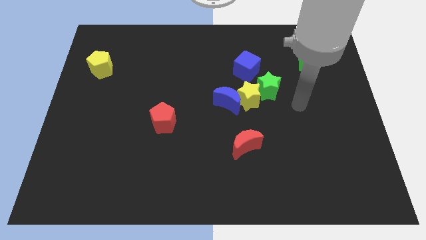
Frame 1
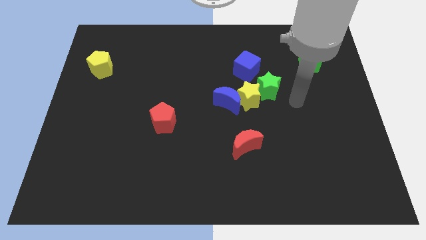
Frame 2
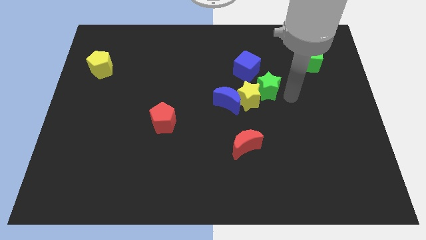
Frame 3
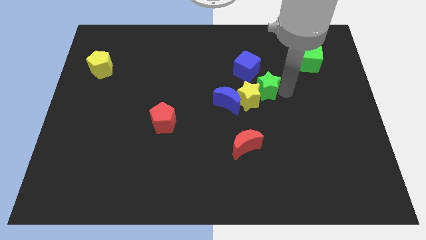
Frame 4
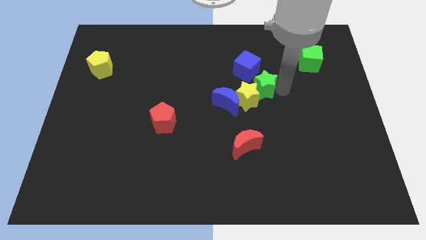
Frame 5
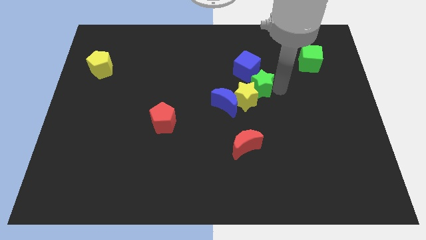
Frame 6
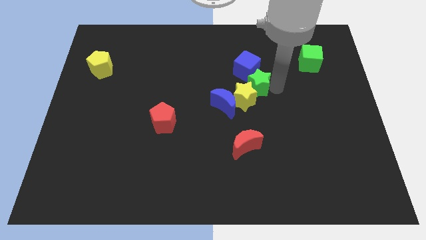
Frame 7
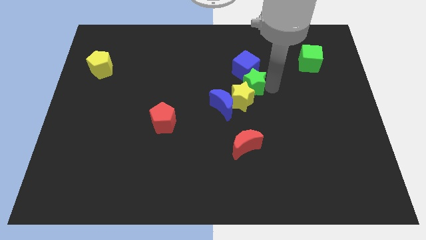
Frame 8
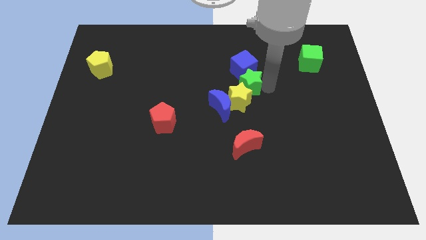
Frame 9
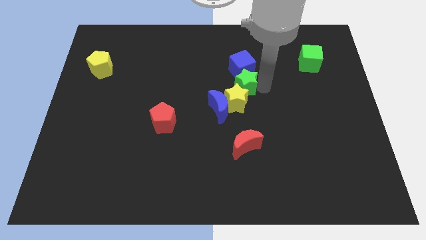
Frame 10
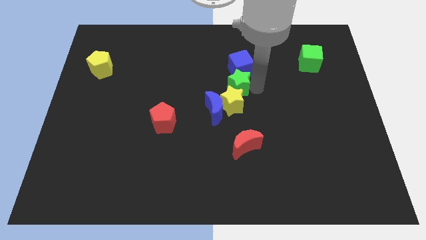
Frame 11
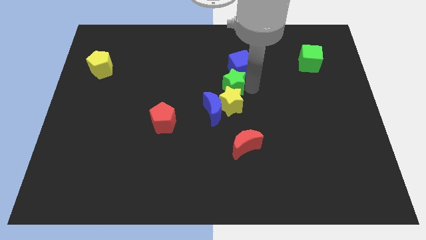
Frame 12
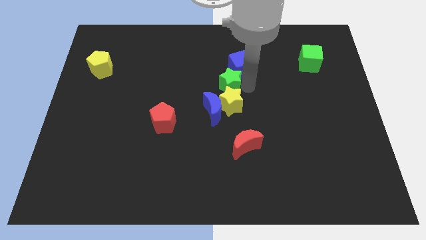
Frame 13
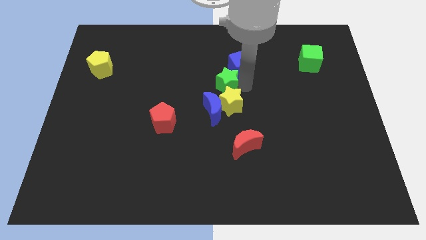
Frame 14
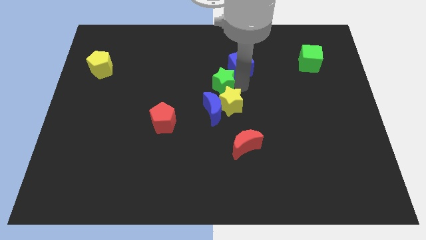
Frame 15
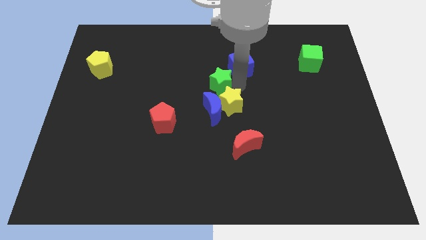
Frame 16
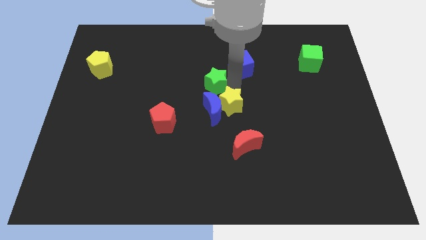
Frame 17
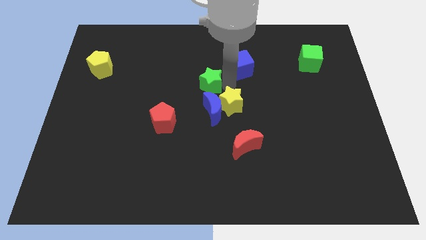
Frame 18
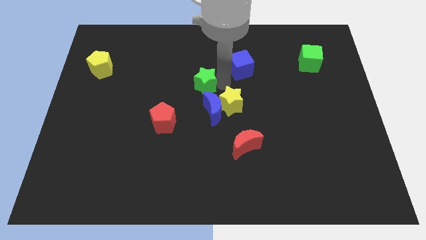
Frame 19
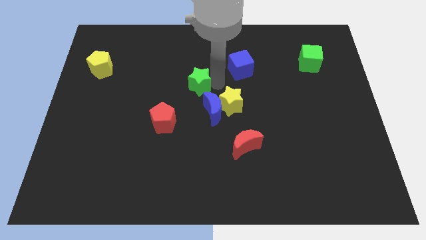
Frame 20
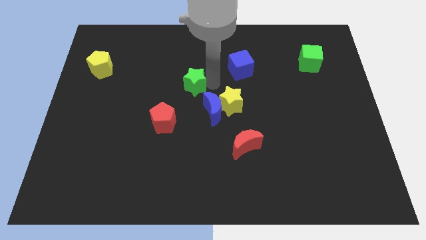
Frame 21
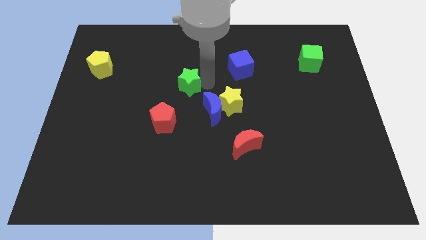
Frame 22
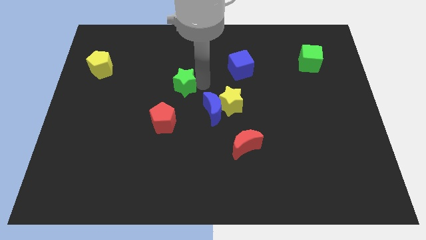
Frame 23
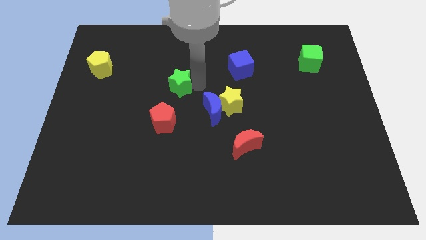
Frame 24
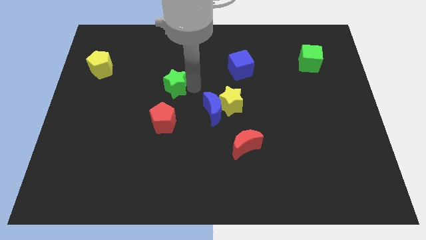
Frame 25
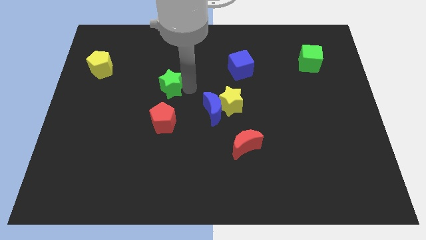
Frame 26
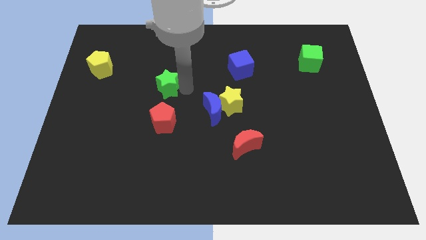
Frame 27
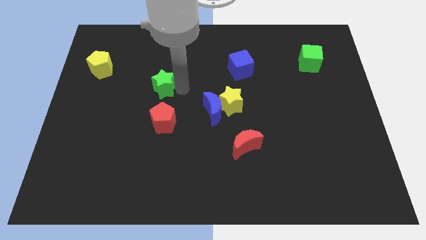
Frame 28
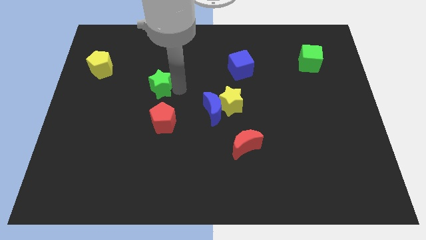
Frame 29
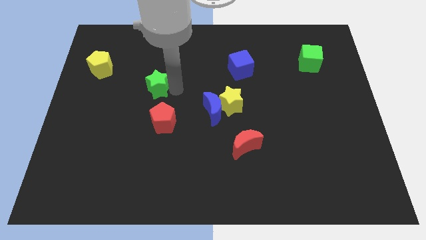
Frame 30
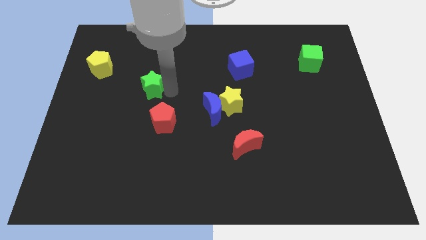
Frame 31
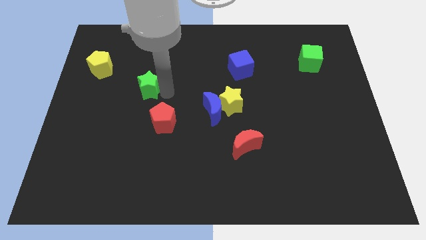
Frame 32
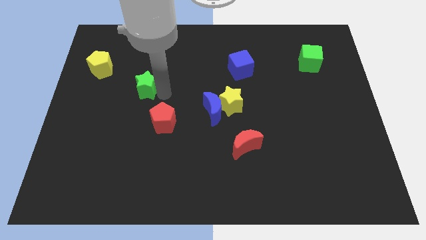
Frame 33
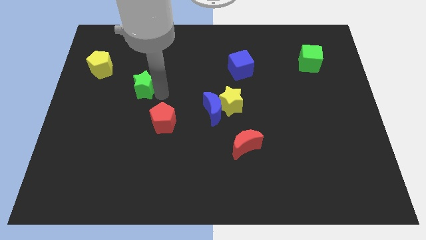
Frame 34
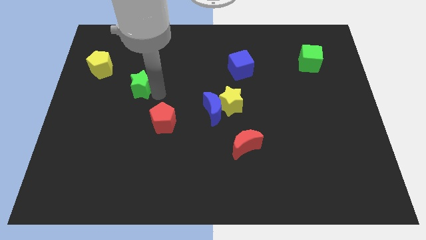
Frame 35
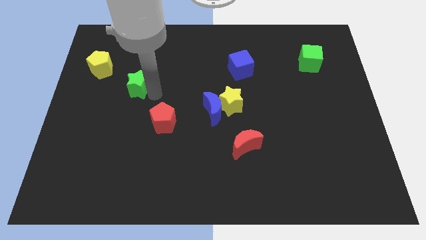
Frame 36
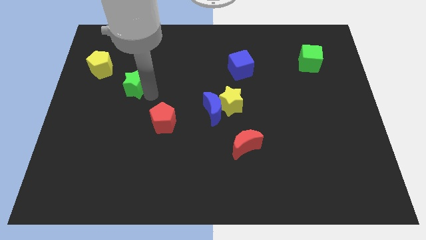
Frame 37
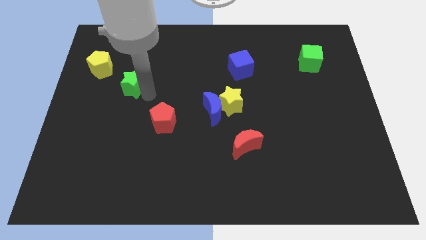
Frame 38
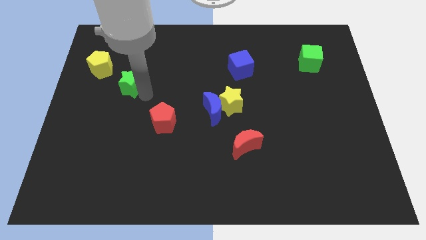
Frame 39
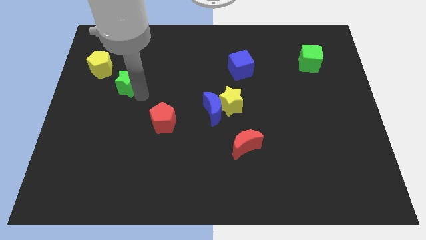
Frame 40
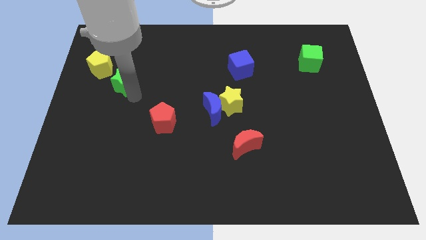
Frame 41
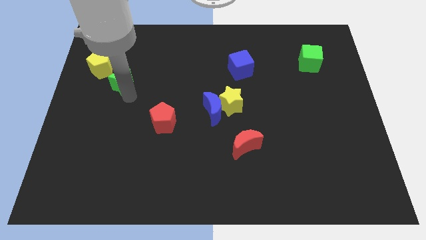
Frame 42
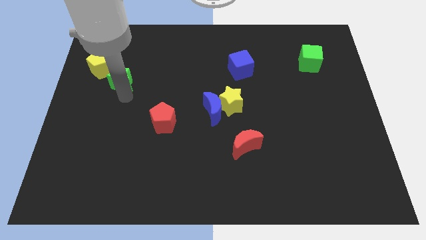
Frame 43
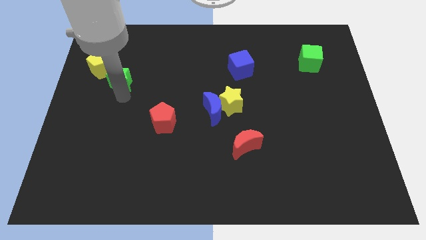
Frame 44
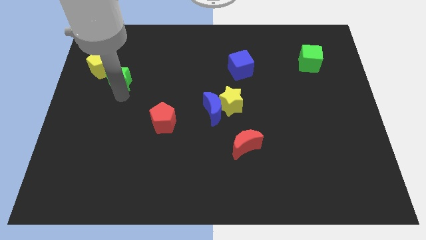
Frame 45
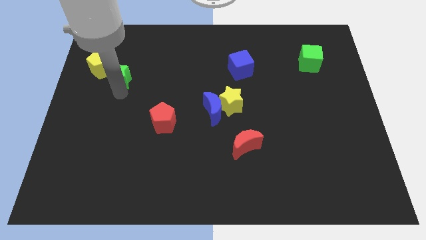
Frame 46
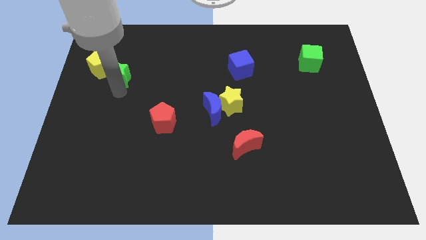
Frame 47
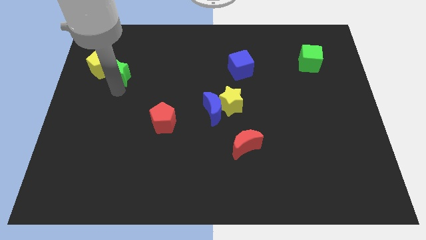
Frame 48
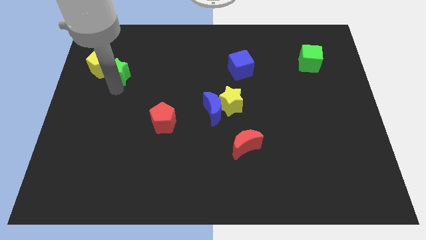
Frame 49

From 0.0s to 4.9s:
push the green star towards the yellow pentagon

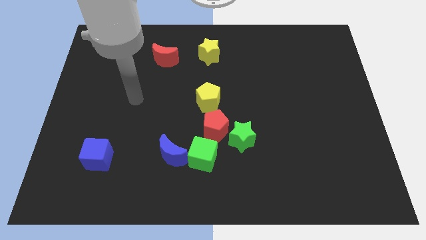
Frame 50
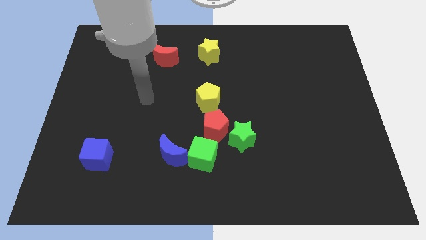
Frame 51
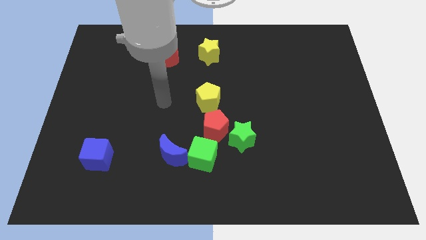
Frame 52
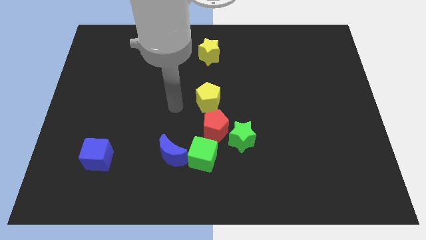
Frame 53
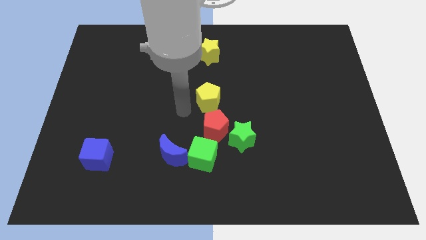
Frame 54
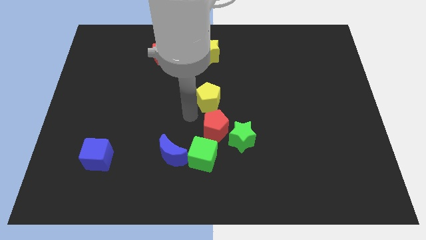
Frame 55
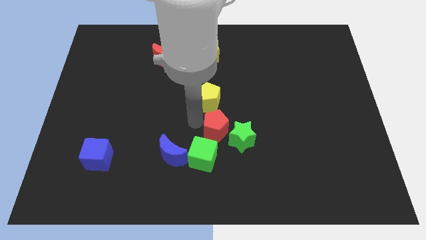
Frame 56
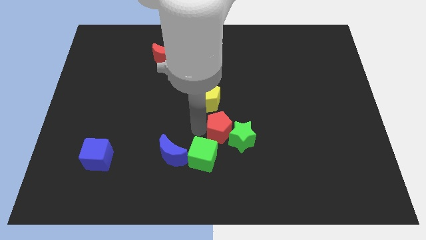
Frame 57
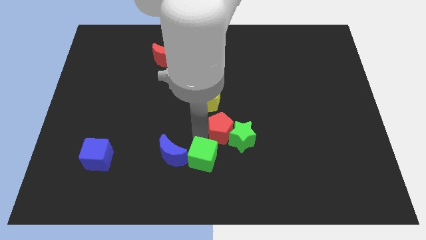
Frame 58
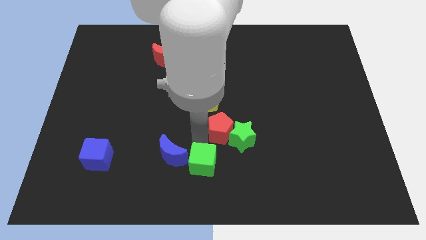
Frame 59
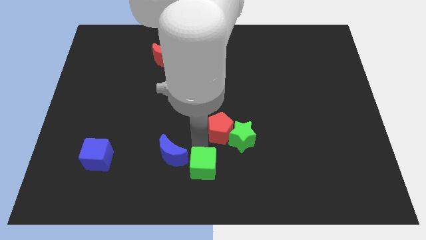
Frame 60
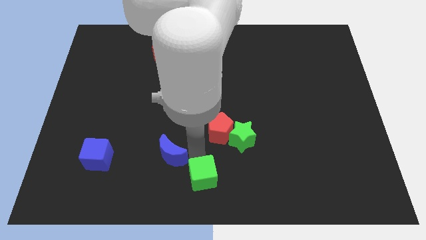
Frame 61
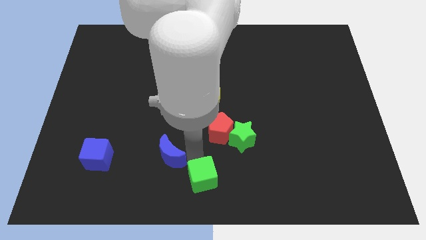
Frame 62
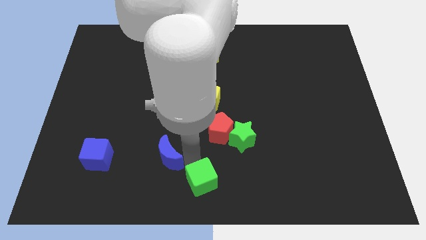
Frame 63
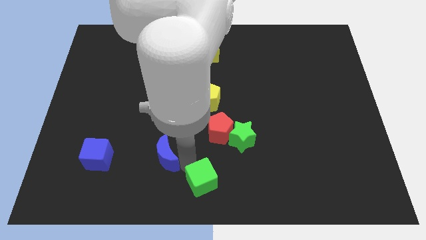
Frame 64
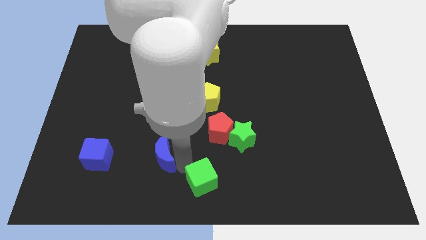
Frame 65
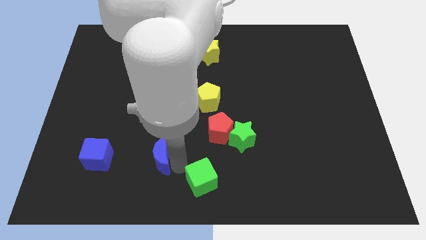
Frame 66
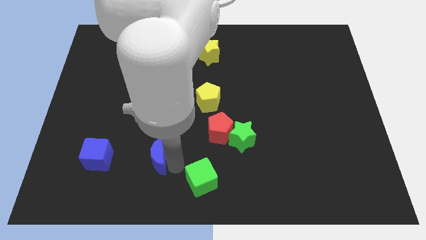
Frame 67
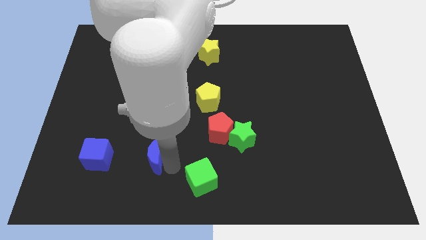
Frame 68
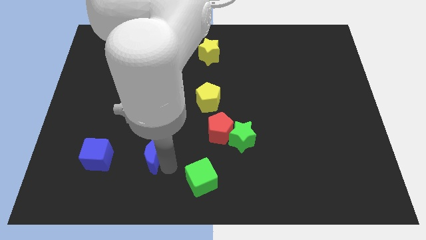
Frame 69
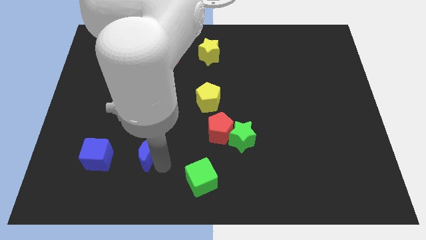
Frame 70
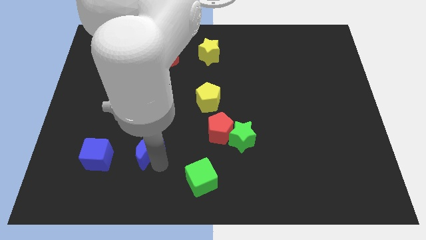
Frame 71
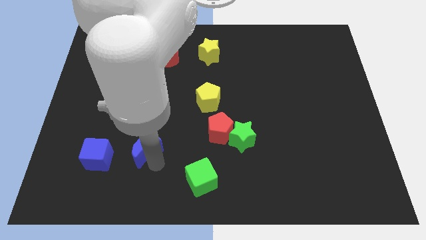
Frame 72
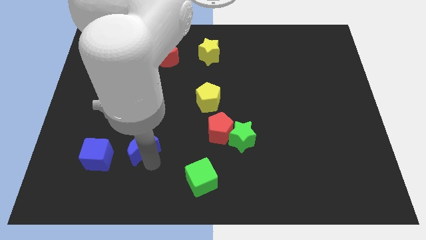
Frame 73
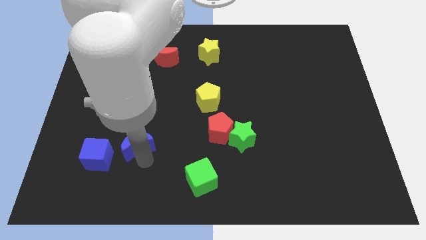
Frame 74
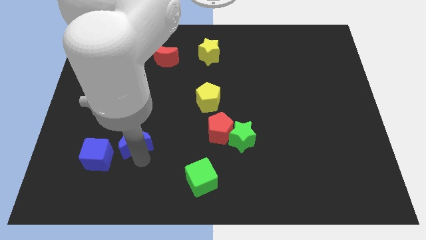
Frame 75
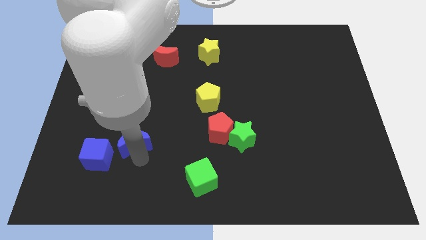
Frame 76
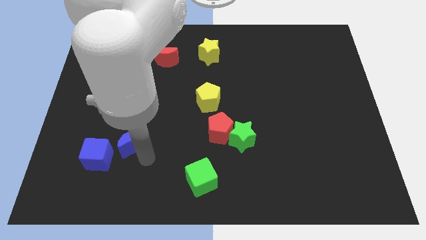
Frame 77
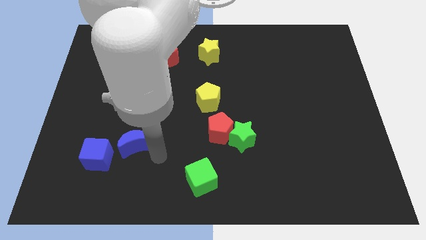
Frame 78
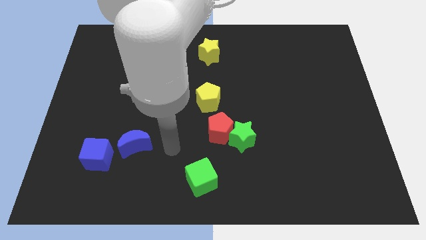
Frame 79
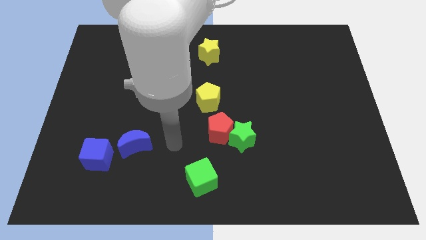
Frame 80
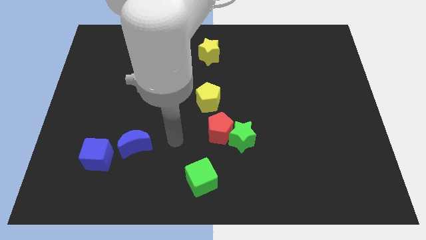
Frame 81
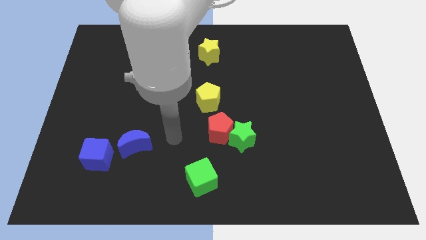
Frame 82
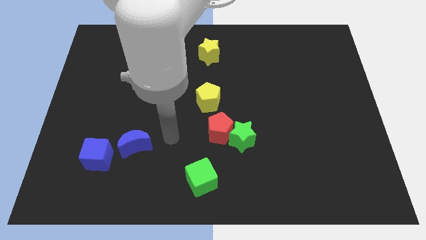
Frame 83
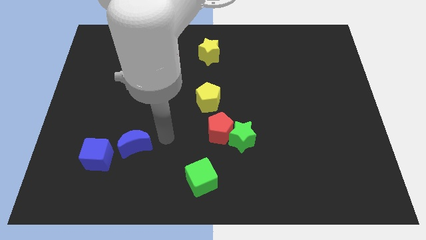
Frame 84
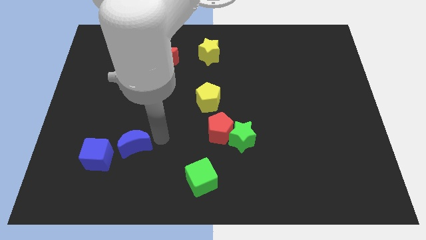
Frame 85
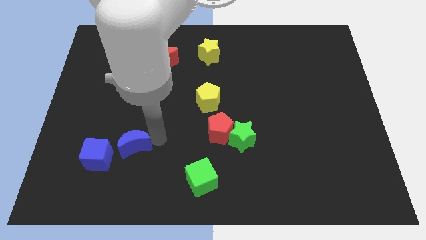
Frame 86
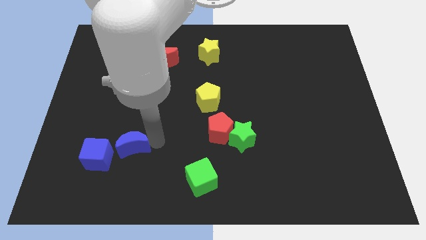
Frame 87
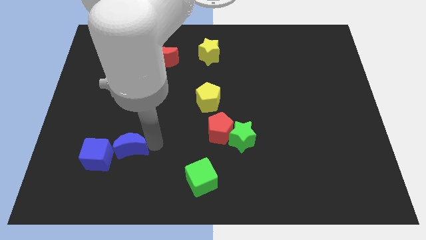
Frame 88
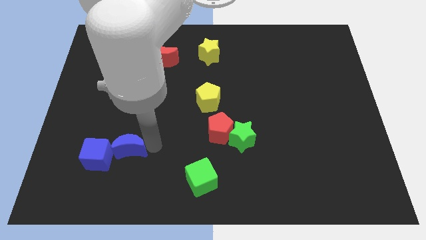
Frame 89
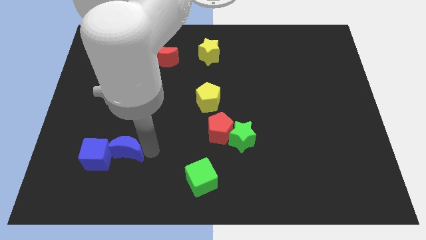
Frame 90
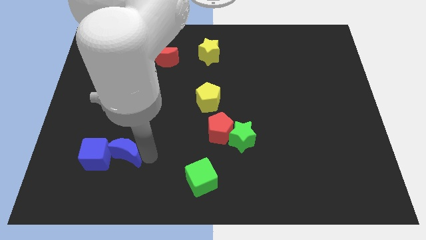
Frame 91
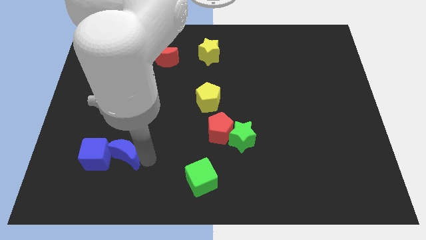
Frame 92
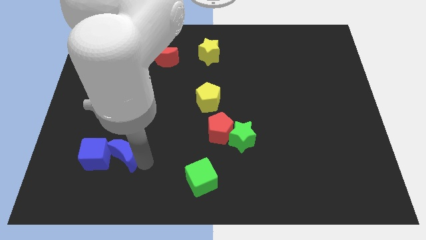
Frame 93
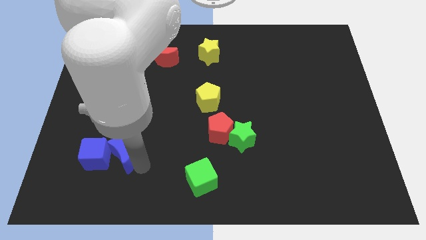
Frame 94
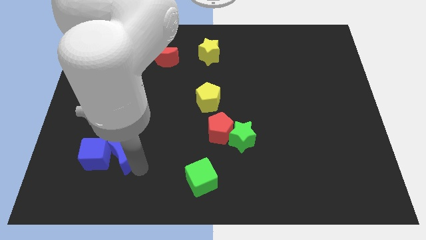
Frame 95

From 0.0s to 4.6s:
put the blue moon close to the blue cube
